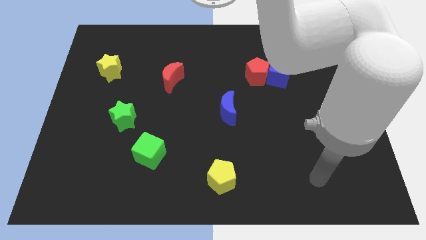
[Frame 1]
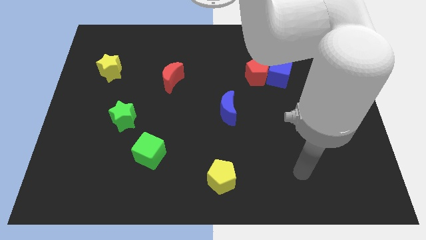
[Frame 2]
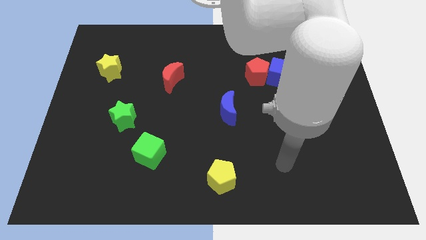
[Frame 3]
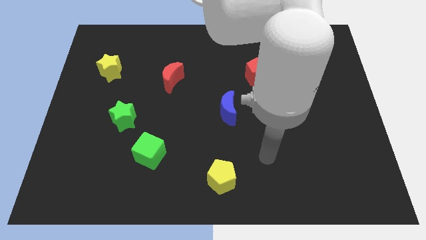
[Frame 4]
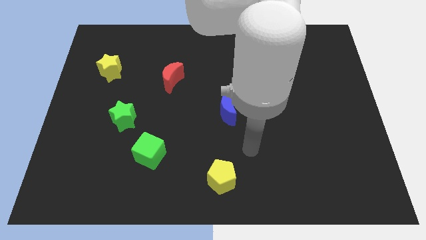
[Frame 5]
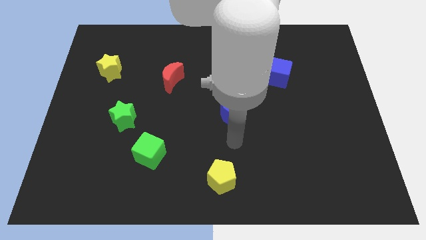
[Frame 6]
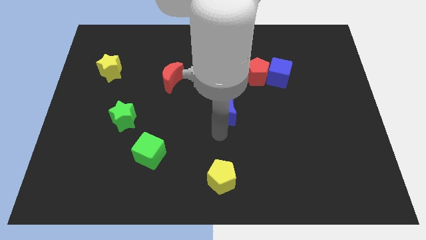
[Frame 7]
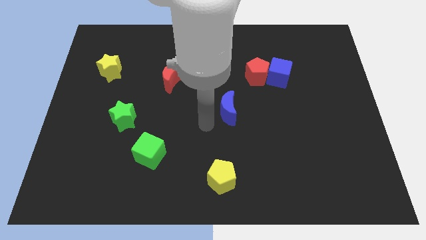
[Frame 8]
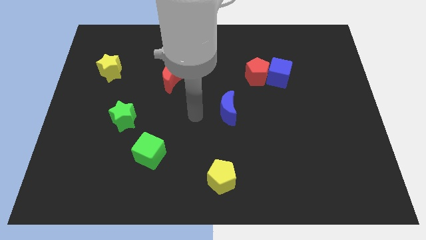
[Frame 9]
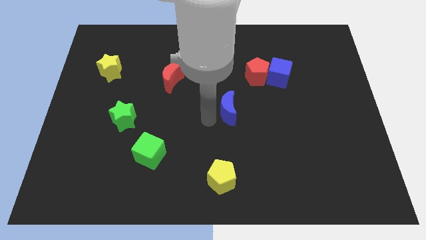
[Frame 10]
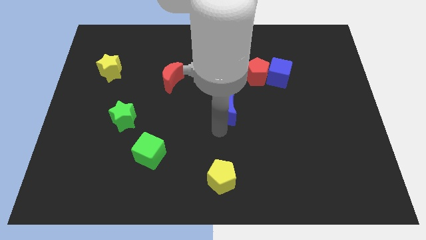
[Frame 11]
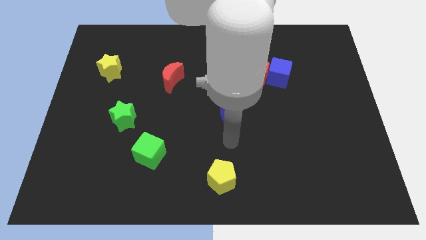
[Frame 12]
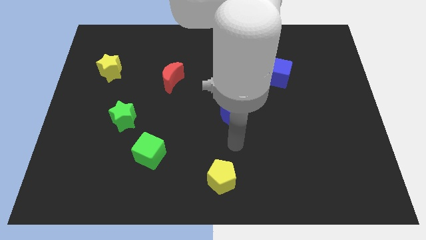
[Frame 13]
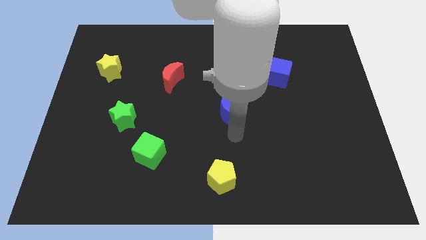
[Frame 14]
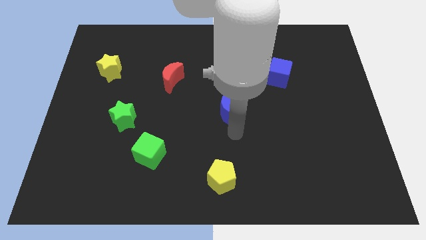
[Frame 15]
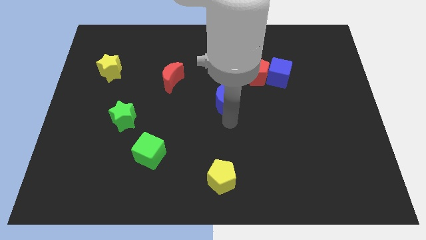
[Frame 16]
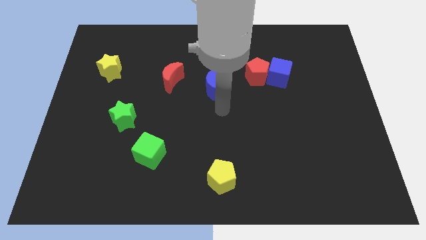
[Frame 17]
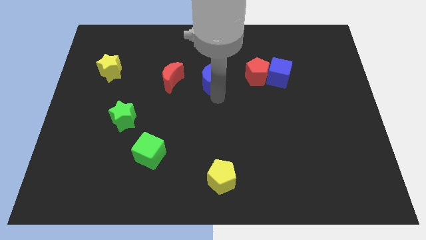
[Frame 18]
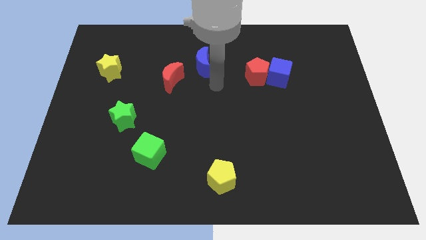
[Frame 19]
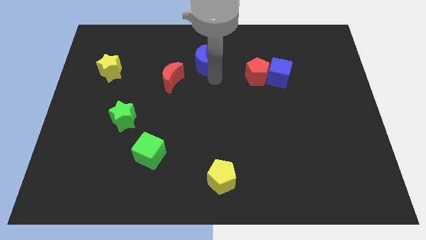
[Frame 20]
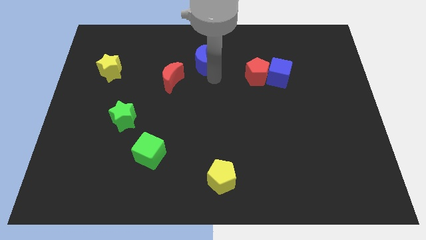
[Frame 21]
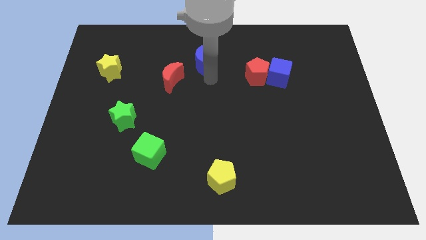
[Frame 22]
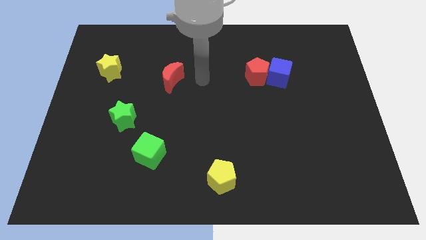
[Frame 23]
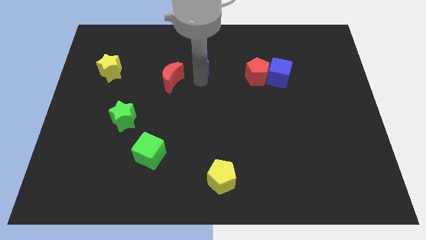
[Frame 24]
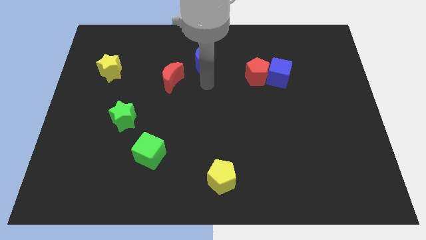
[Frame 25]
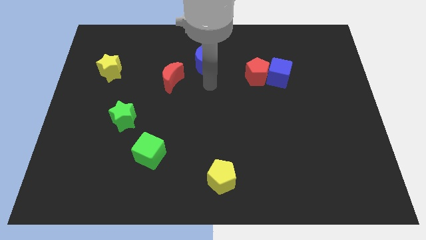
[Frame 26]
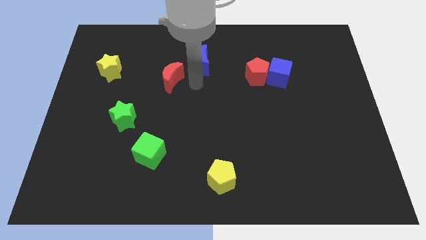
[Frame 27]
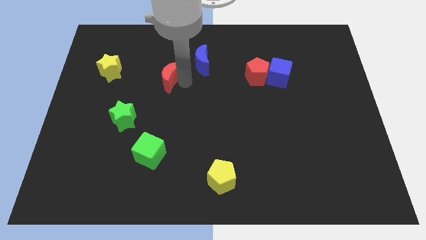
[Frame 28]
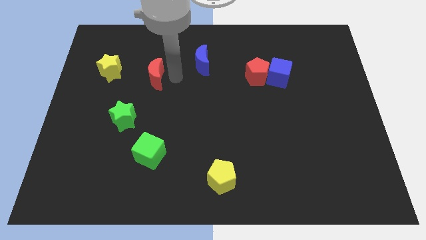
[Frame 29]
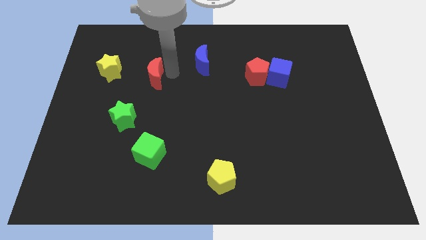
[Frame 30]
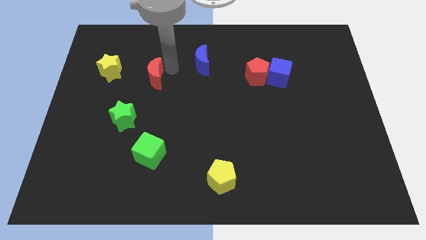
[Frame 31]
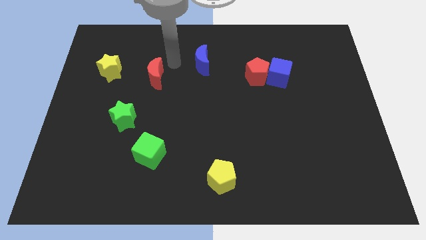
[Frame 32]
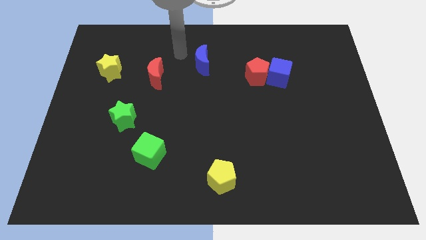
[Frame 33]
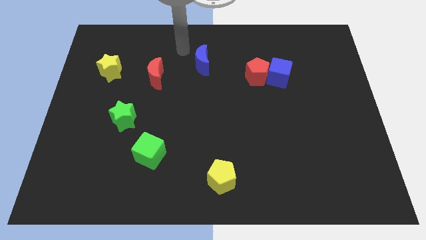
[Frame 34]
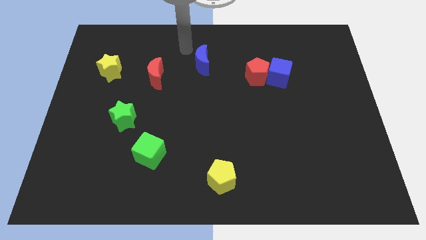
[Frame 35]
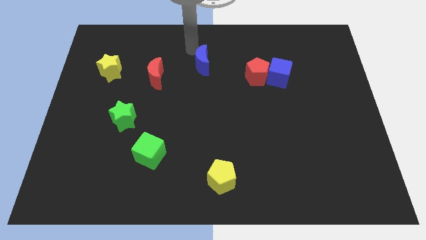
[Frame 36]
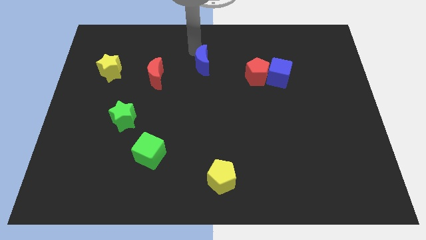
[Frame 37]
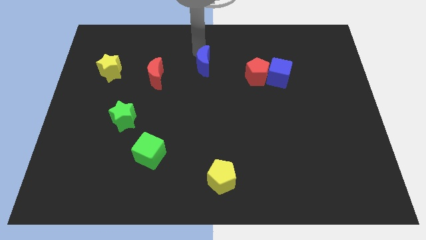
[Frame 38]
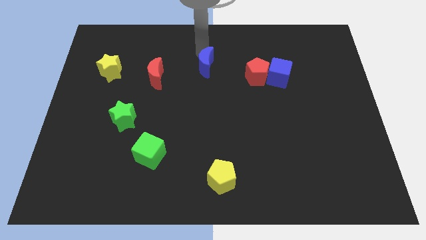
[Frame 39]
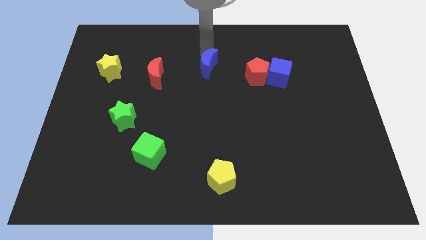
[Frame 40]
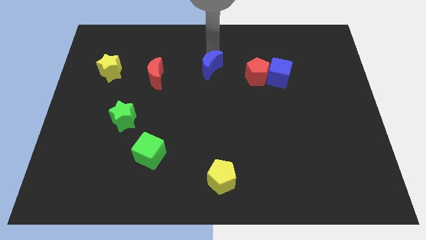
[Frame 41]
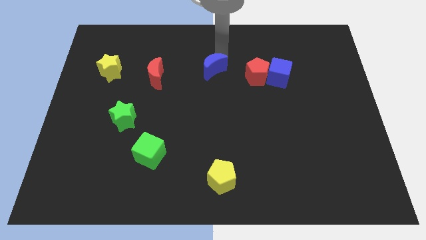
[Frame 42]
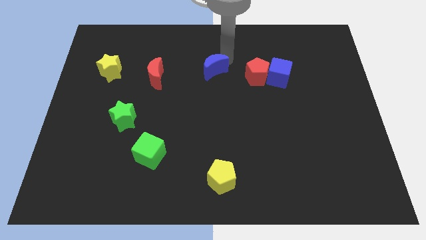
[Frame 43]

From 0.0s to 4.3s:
place the crescents in a horizontal line with yellow pentagon

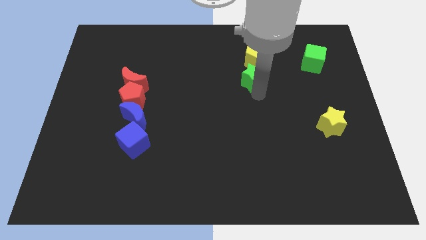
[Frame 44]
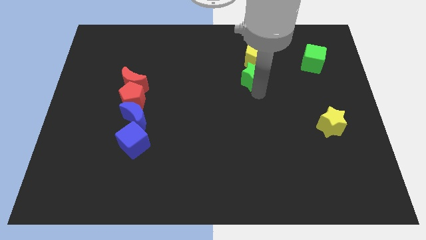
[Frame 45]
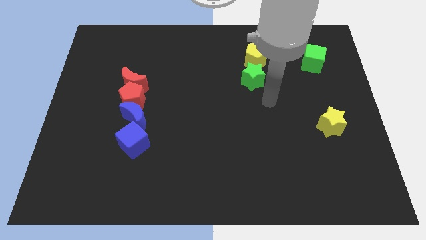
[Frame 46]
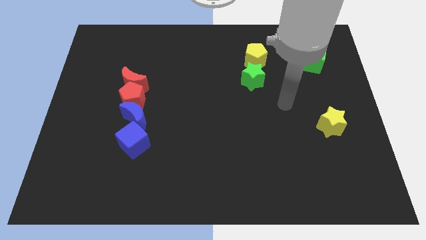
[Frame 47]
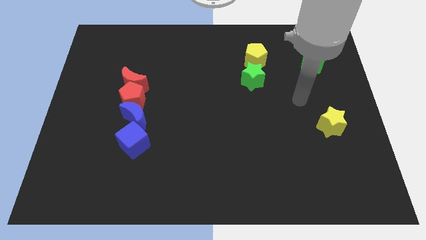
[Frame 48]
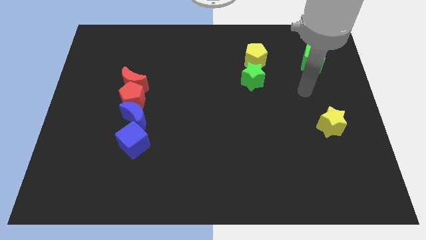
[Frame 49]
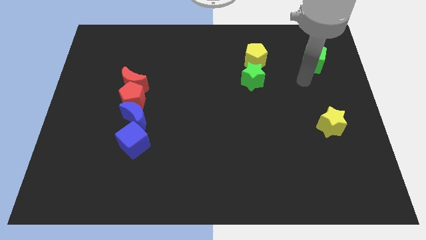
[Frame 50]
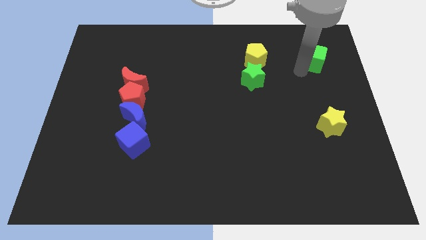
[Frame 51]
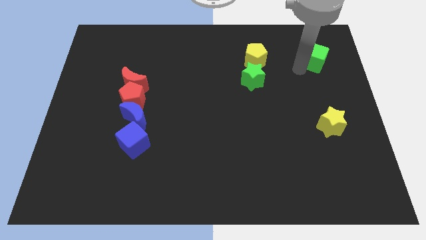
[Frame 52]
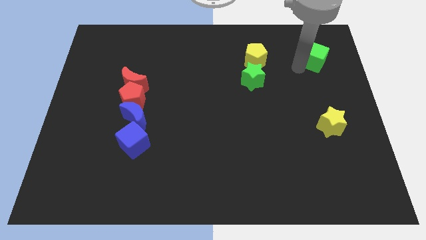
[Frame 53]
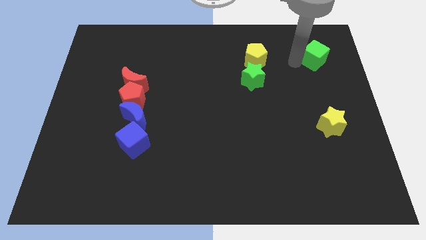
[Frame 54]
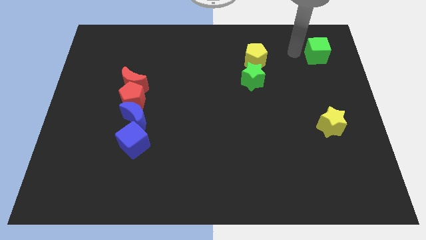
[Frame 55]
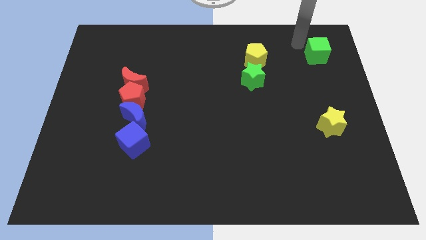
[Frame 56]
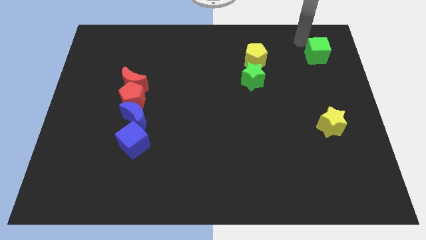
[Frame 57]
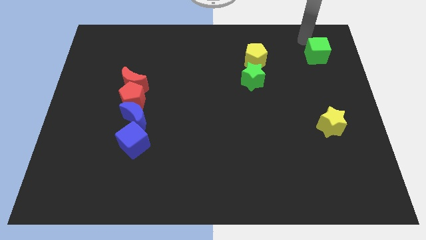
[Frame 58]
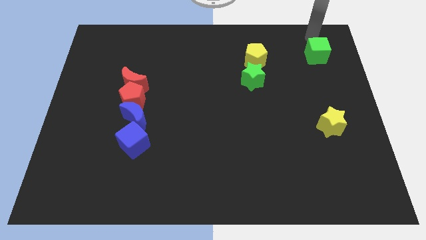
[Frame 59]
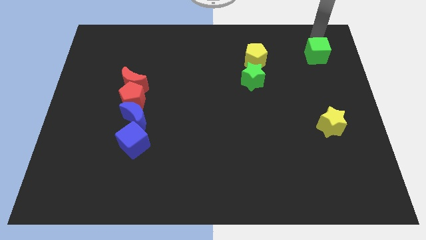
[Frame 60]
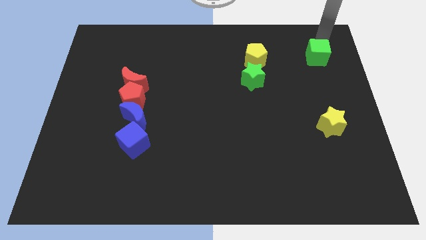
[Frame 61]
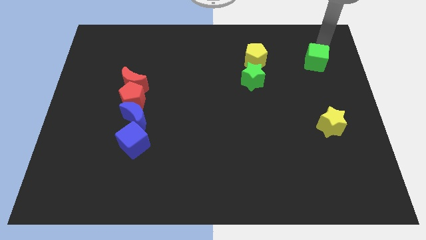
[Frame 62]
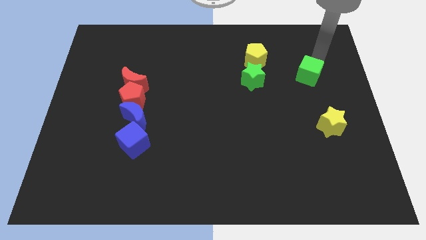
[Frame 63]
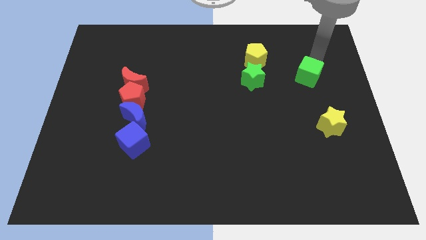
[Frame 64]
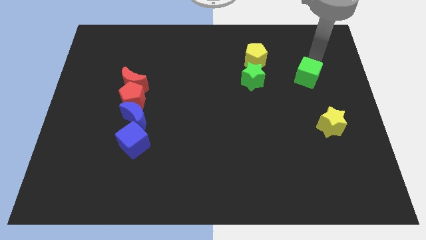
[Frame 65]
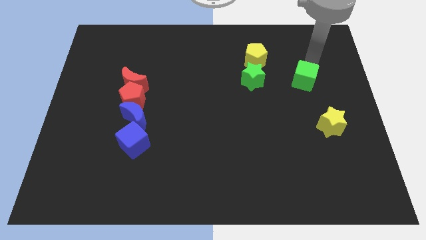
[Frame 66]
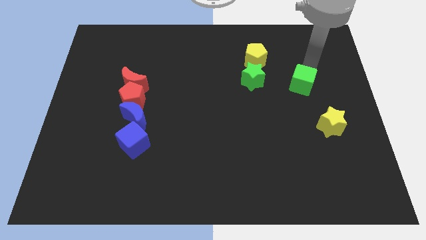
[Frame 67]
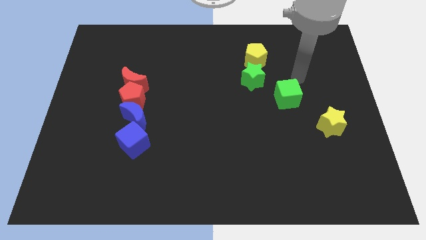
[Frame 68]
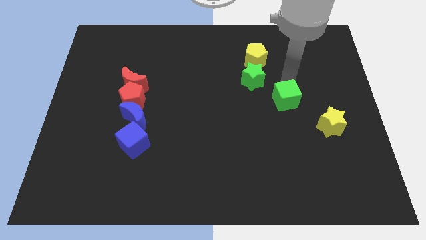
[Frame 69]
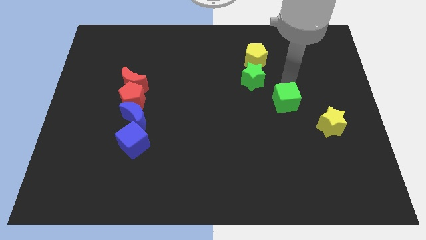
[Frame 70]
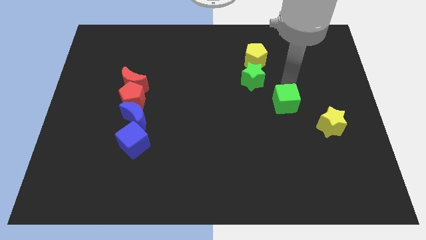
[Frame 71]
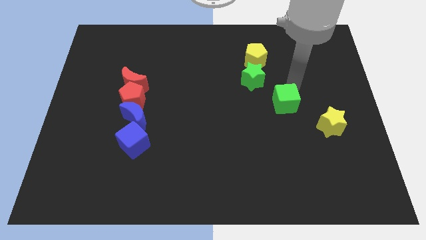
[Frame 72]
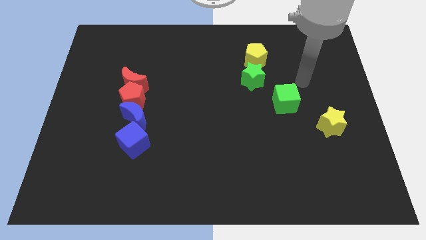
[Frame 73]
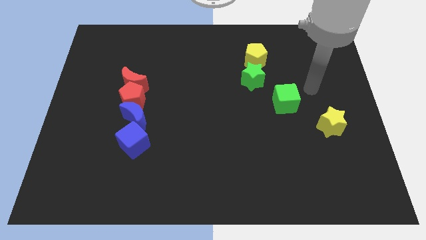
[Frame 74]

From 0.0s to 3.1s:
move the green cube to the bottom right of the green star

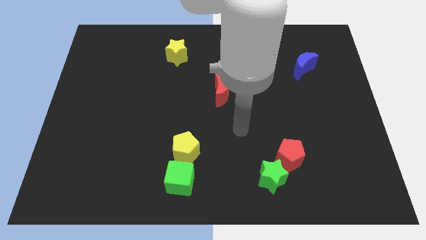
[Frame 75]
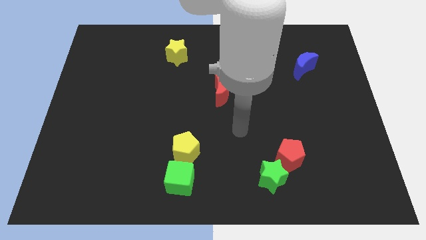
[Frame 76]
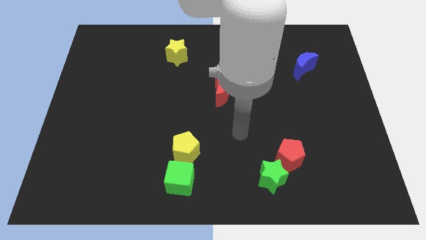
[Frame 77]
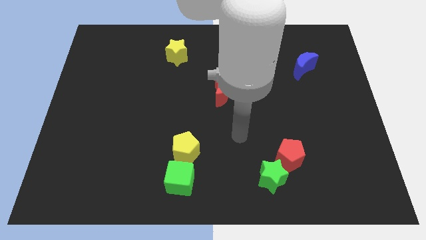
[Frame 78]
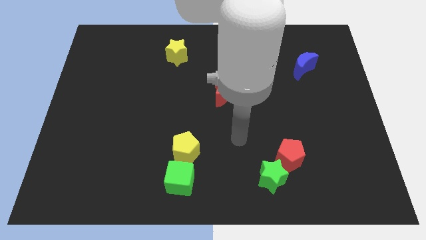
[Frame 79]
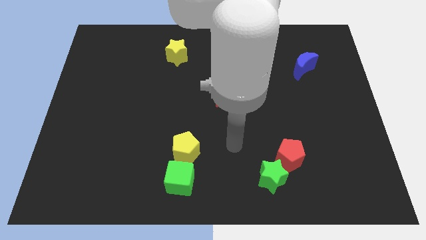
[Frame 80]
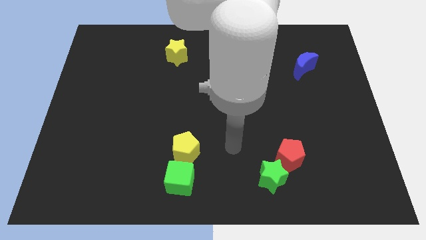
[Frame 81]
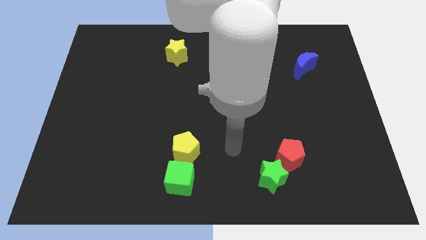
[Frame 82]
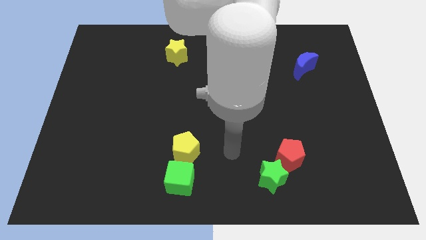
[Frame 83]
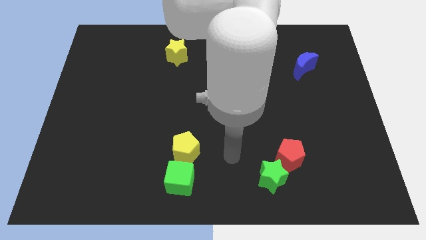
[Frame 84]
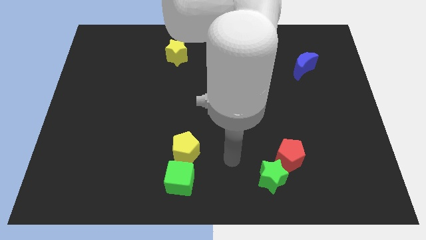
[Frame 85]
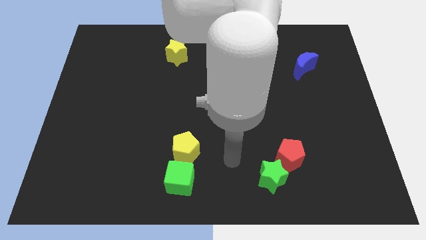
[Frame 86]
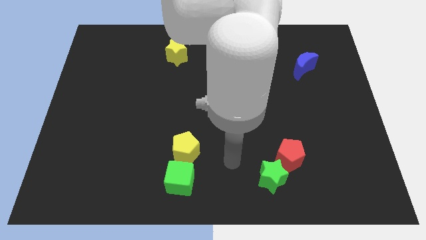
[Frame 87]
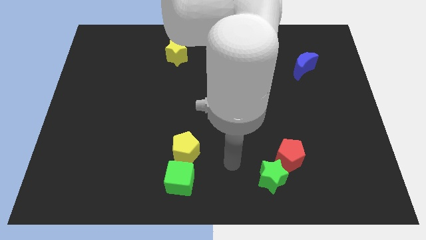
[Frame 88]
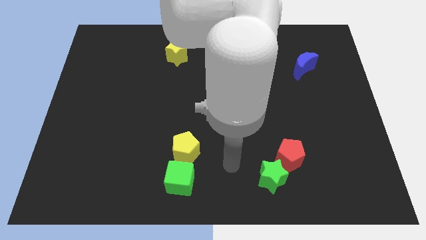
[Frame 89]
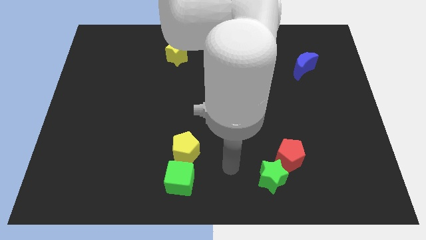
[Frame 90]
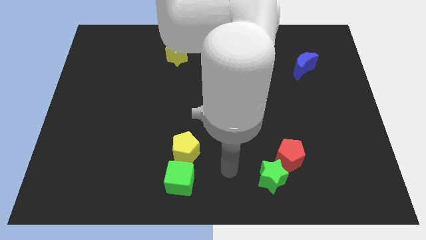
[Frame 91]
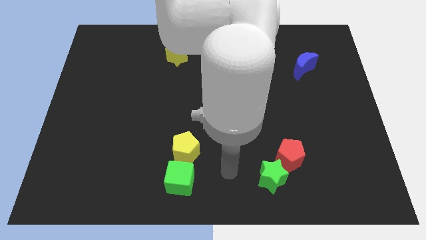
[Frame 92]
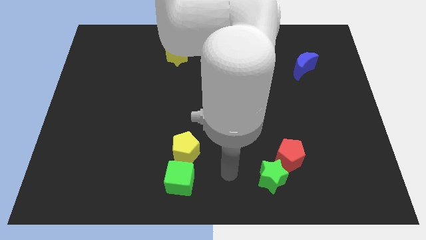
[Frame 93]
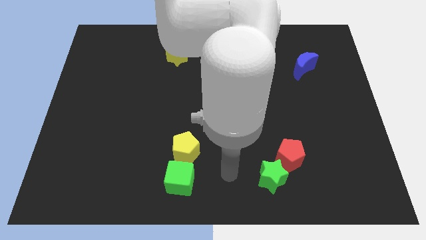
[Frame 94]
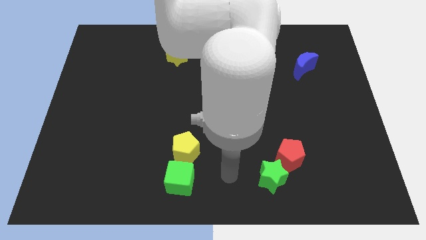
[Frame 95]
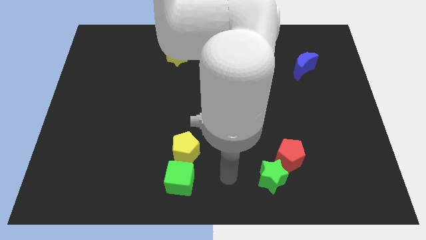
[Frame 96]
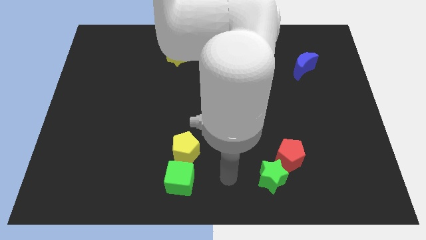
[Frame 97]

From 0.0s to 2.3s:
move your arm towards the bottom center of the board
